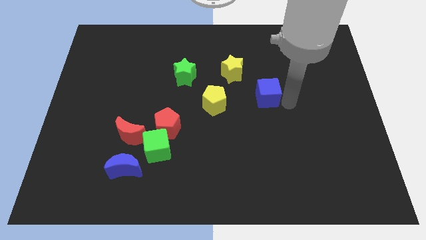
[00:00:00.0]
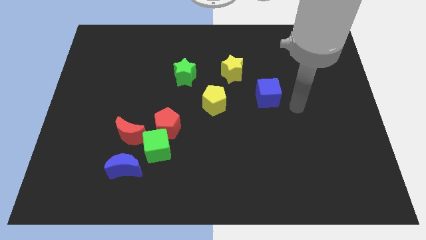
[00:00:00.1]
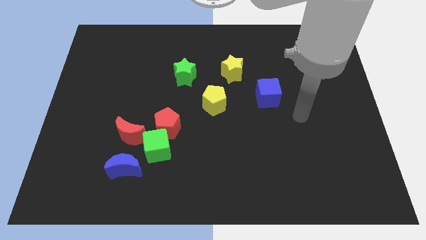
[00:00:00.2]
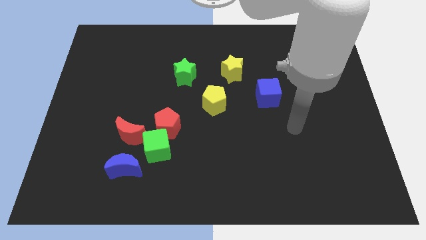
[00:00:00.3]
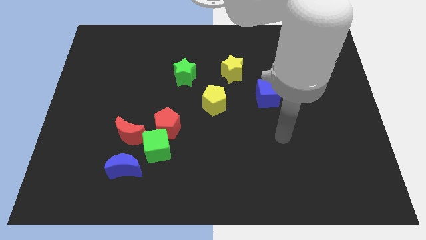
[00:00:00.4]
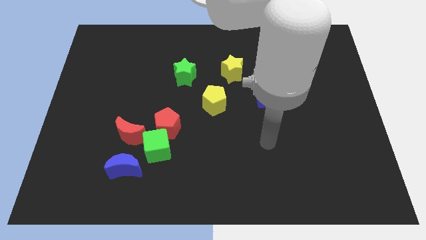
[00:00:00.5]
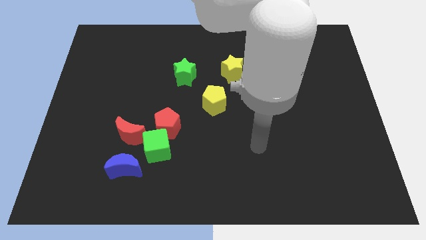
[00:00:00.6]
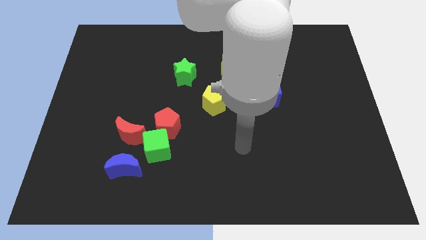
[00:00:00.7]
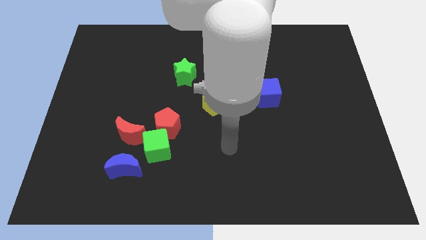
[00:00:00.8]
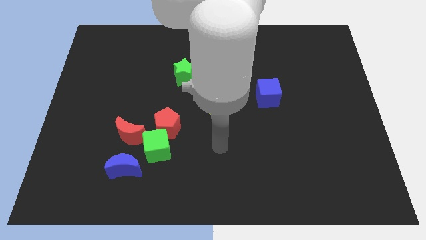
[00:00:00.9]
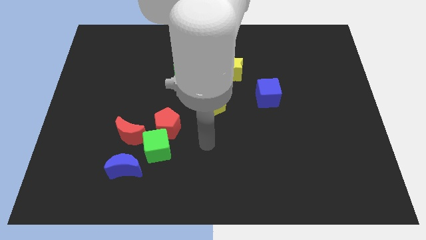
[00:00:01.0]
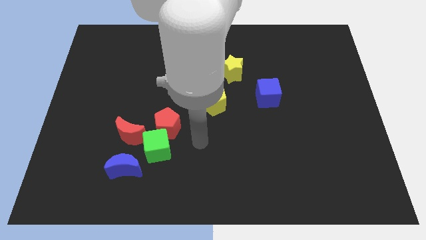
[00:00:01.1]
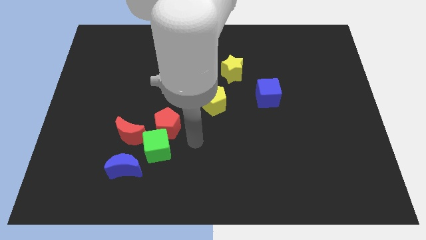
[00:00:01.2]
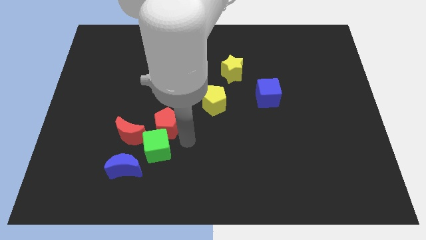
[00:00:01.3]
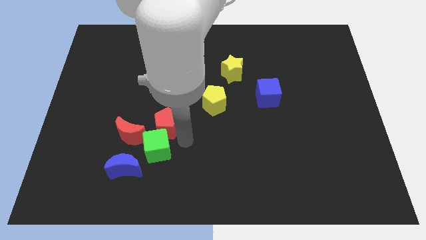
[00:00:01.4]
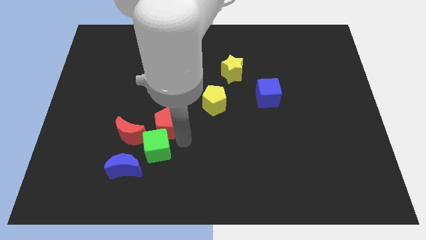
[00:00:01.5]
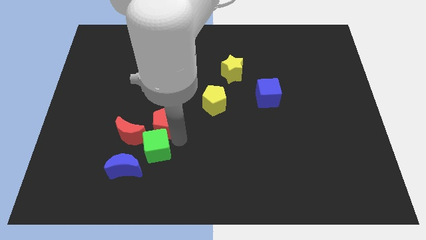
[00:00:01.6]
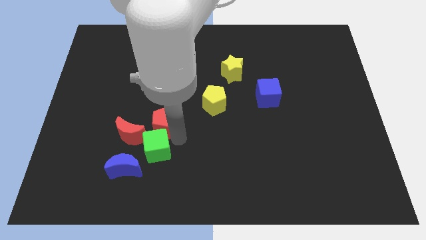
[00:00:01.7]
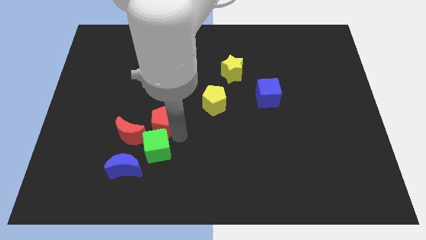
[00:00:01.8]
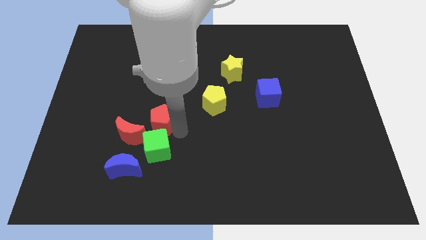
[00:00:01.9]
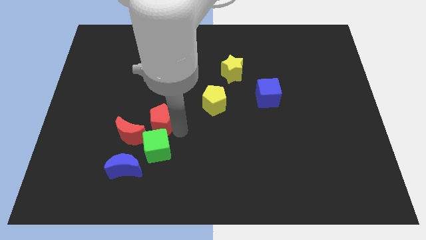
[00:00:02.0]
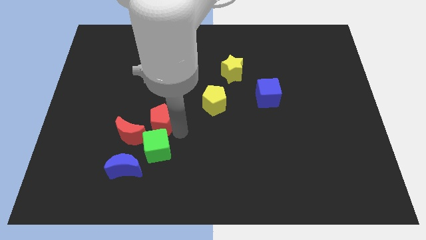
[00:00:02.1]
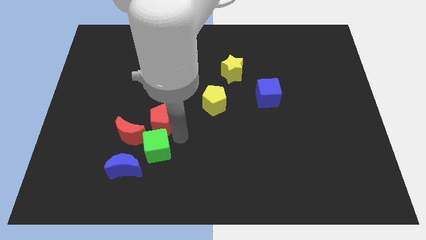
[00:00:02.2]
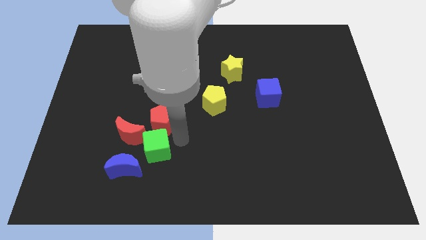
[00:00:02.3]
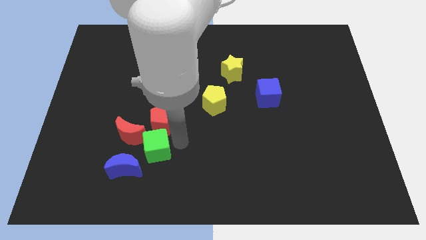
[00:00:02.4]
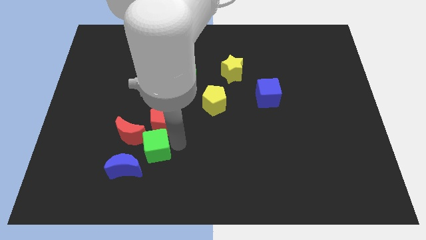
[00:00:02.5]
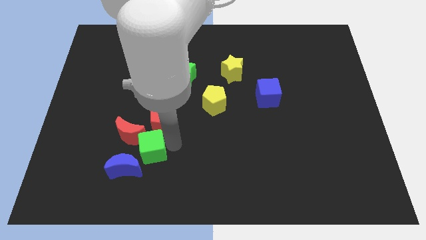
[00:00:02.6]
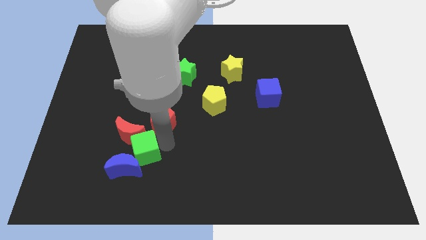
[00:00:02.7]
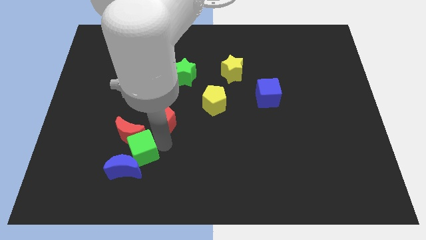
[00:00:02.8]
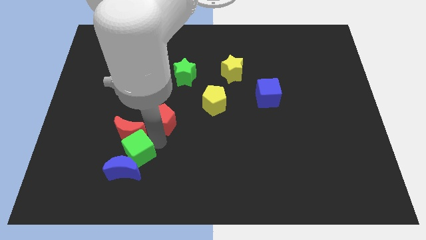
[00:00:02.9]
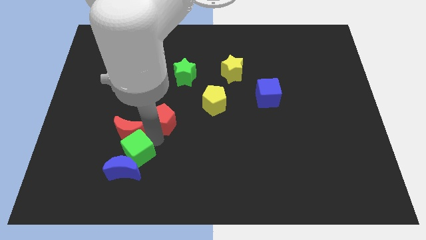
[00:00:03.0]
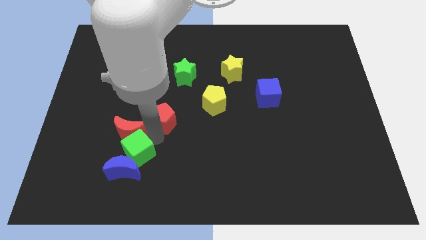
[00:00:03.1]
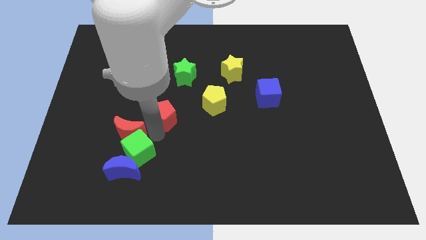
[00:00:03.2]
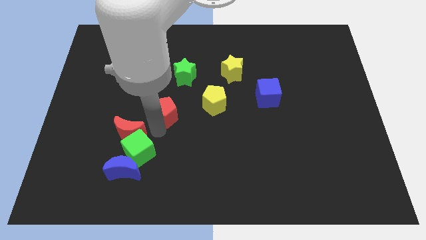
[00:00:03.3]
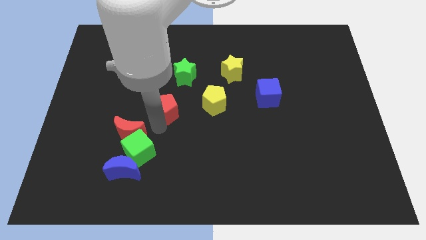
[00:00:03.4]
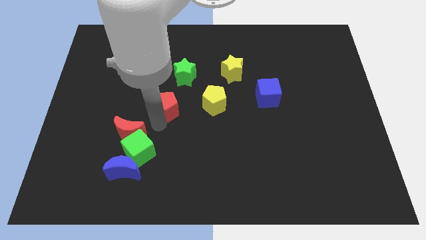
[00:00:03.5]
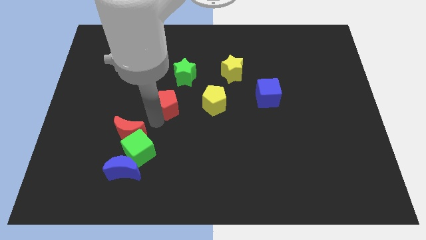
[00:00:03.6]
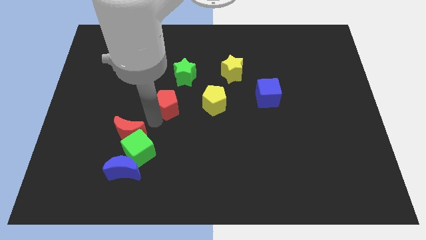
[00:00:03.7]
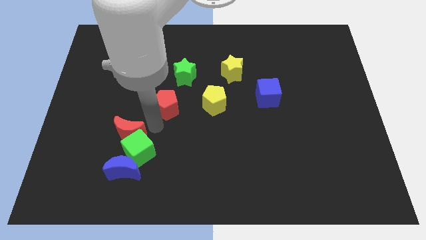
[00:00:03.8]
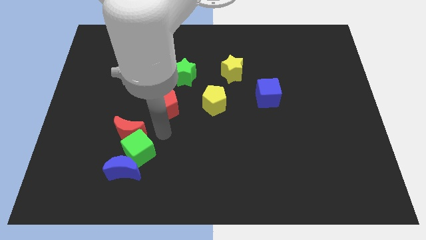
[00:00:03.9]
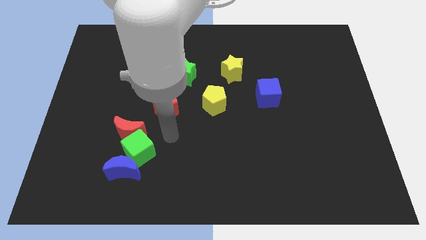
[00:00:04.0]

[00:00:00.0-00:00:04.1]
place the right pentagon left to the yellow pentagon

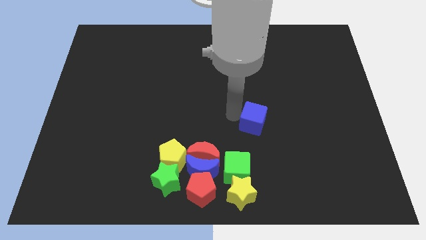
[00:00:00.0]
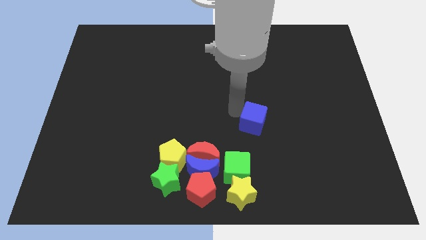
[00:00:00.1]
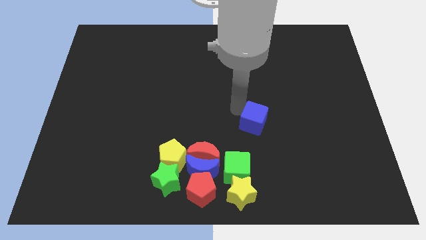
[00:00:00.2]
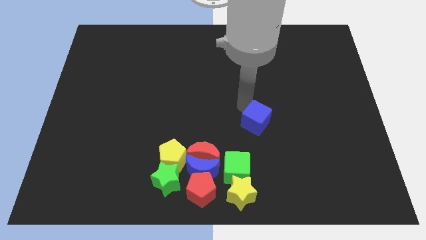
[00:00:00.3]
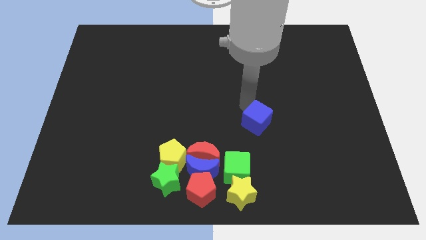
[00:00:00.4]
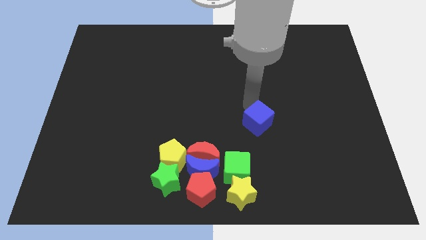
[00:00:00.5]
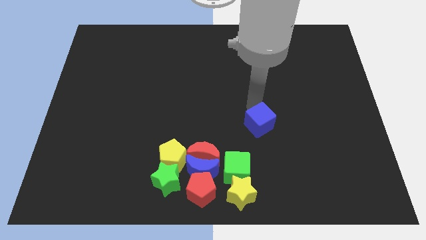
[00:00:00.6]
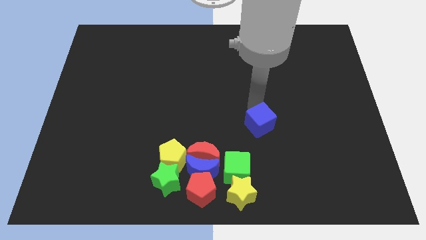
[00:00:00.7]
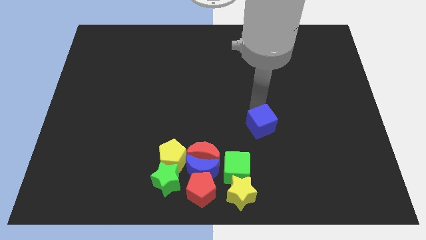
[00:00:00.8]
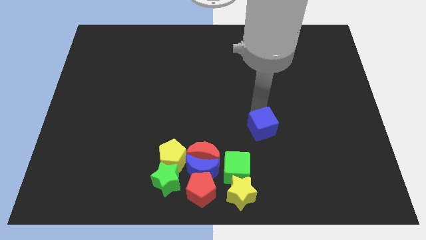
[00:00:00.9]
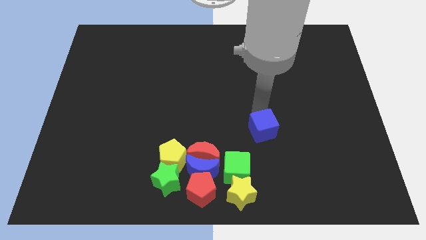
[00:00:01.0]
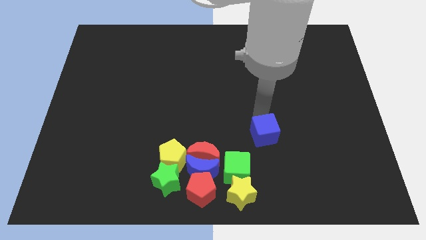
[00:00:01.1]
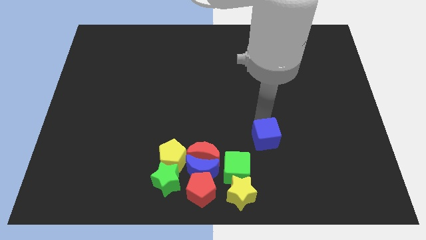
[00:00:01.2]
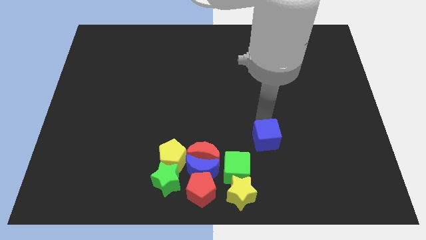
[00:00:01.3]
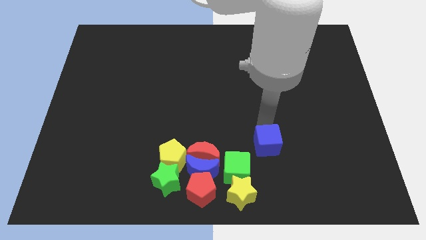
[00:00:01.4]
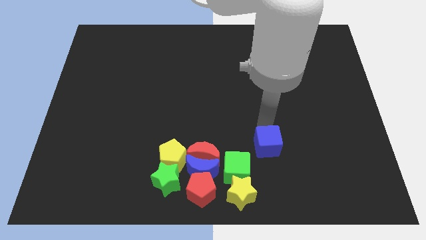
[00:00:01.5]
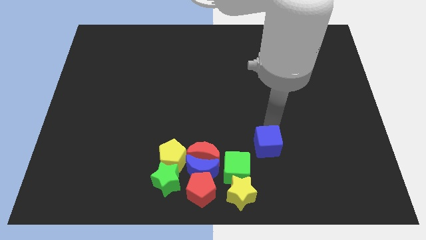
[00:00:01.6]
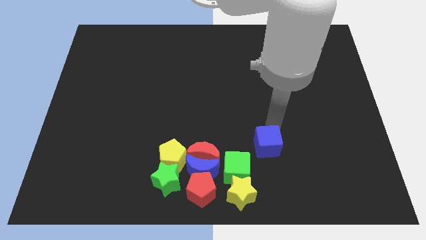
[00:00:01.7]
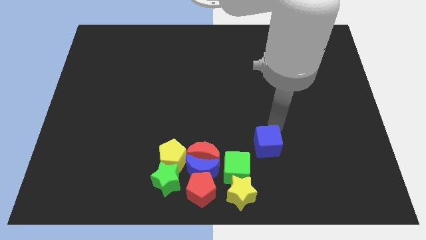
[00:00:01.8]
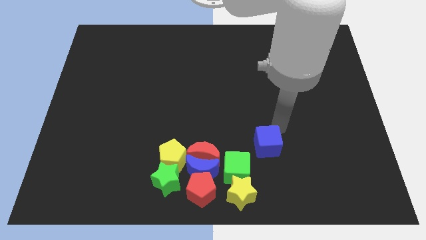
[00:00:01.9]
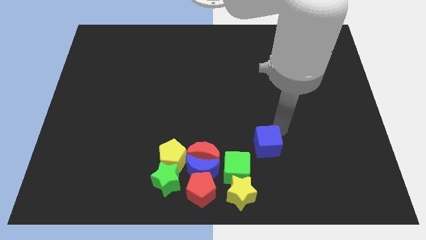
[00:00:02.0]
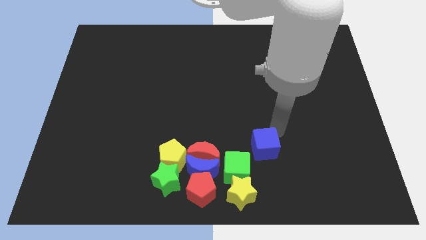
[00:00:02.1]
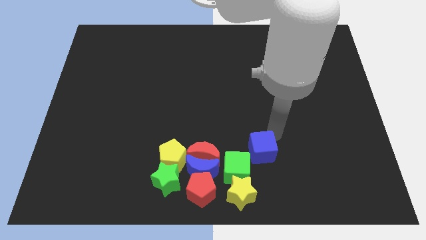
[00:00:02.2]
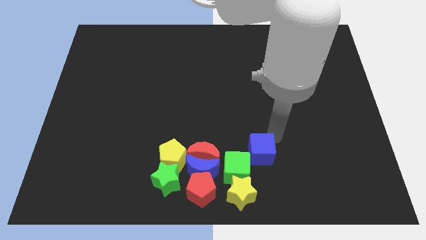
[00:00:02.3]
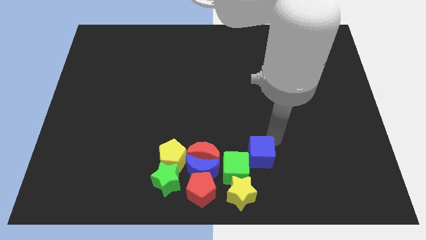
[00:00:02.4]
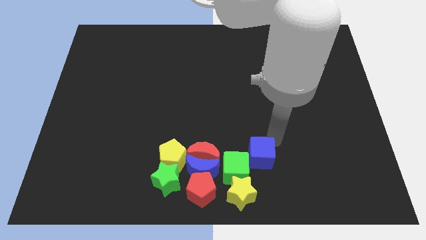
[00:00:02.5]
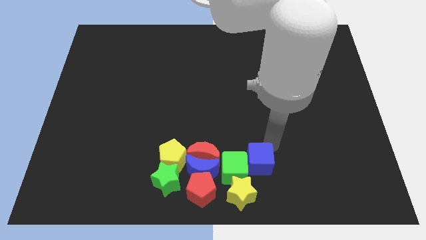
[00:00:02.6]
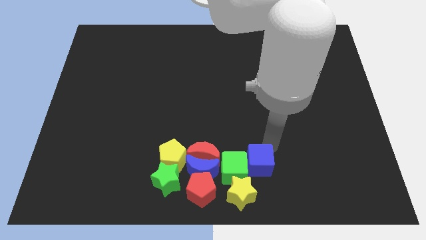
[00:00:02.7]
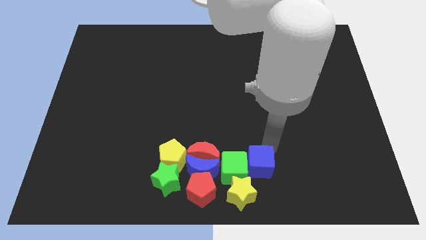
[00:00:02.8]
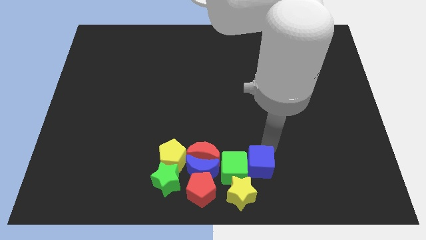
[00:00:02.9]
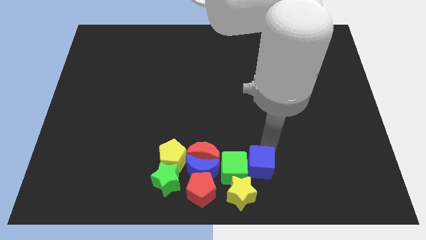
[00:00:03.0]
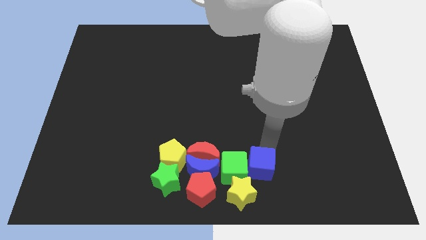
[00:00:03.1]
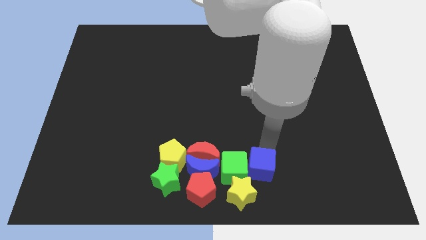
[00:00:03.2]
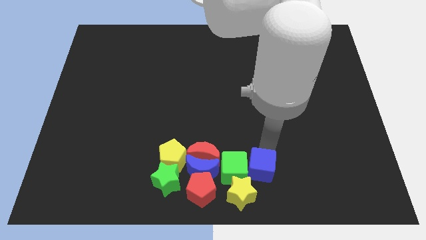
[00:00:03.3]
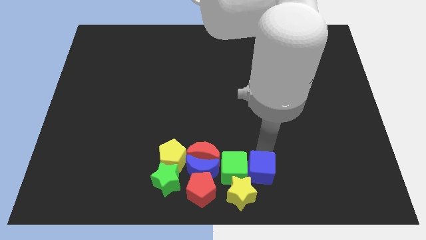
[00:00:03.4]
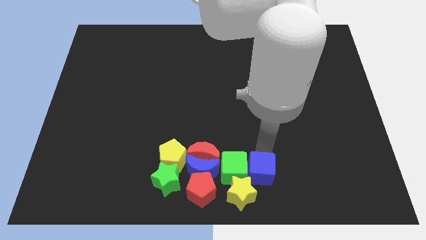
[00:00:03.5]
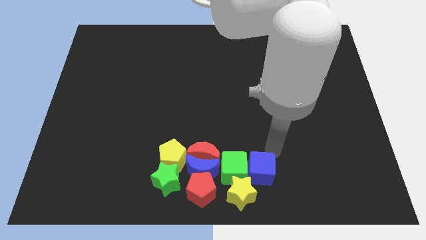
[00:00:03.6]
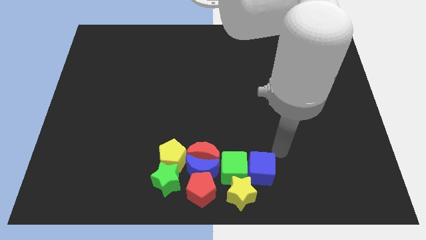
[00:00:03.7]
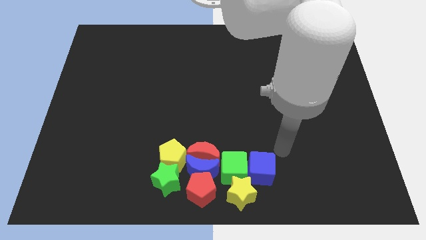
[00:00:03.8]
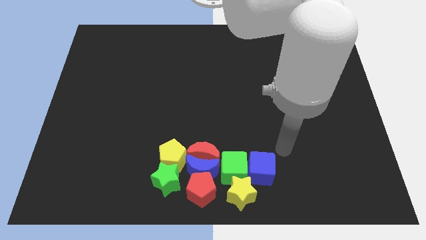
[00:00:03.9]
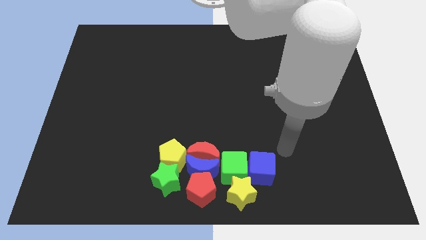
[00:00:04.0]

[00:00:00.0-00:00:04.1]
move blue cube to the right of green cube

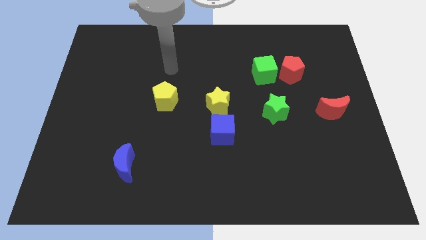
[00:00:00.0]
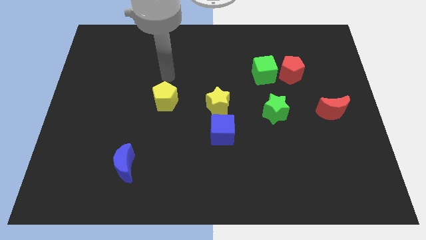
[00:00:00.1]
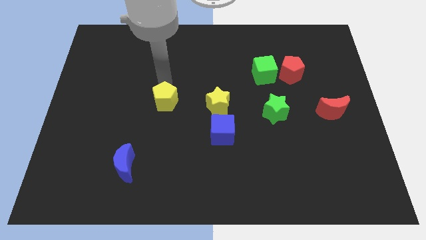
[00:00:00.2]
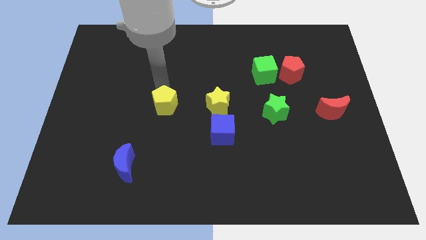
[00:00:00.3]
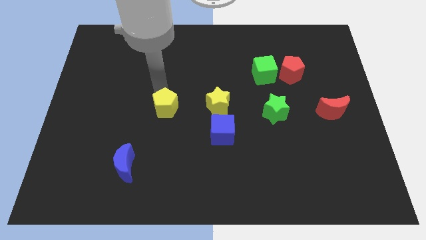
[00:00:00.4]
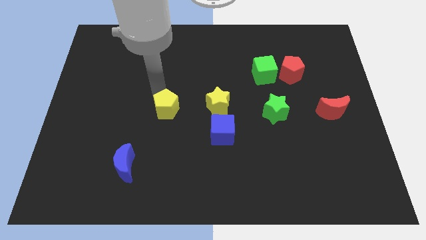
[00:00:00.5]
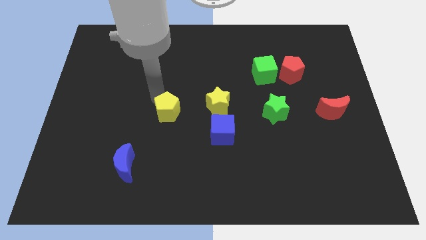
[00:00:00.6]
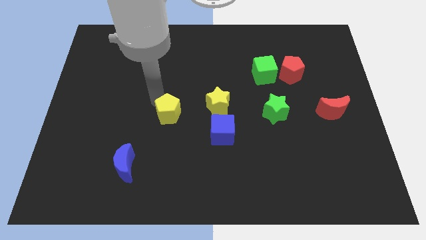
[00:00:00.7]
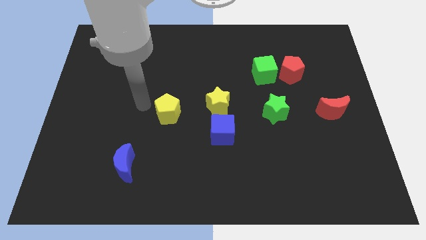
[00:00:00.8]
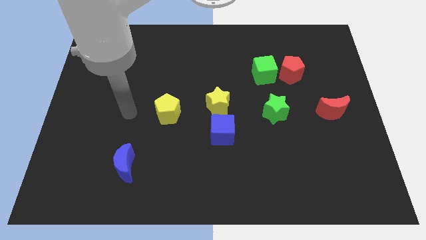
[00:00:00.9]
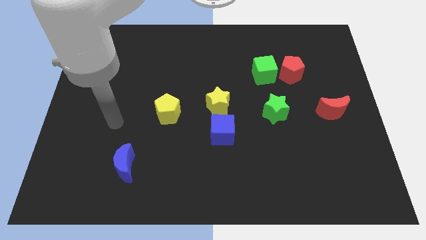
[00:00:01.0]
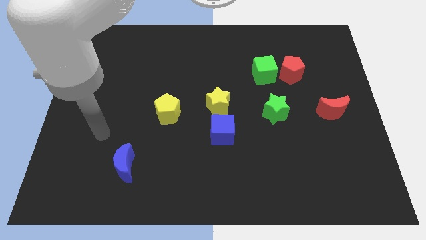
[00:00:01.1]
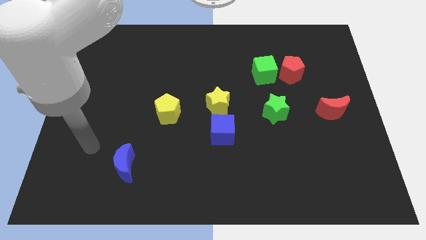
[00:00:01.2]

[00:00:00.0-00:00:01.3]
touch the yellow pentagon
